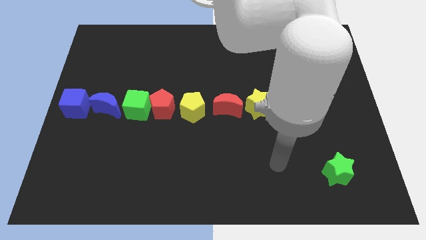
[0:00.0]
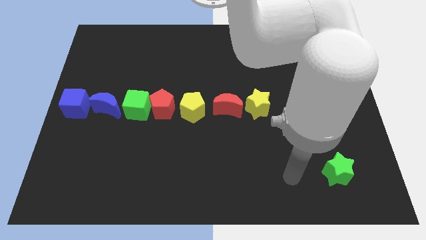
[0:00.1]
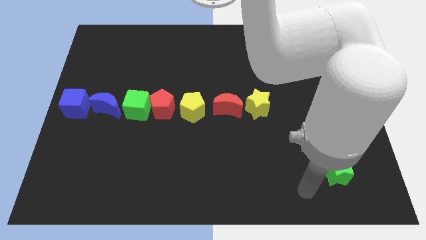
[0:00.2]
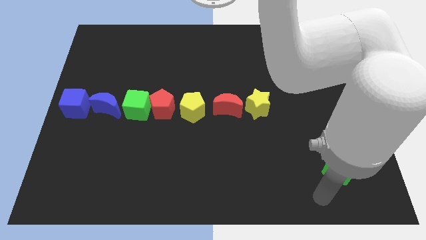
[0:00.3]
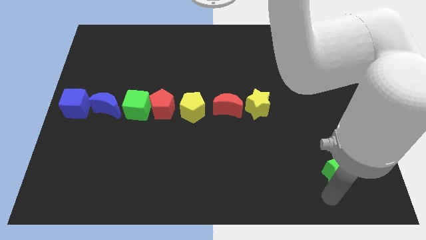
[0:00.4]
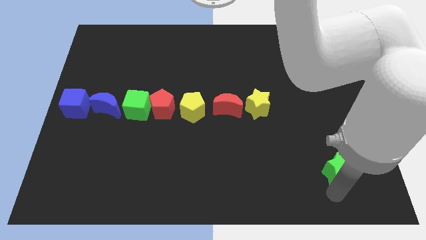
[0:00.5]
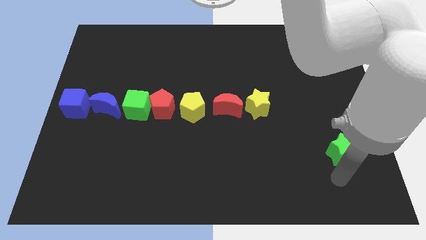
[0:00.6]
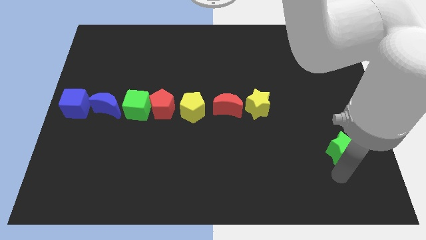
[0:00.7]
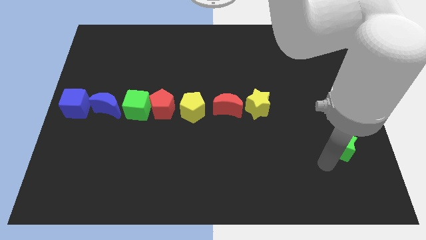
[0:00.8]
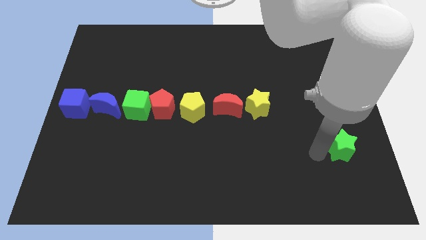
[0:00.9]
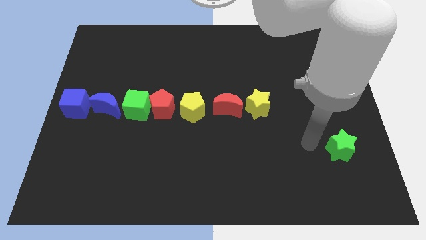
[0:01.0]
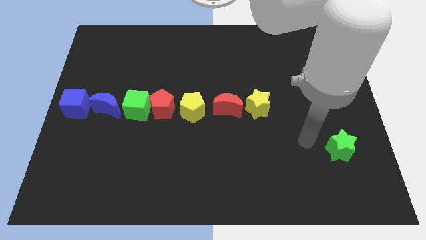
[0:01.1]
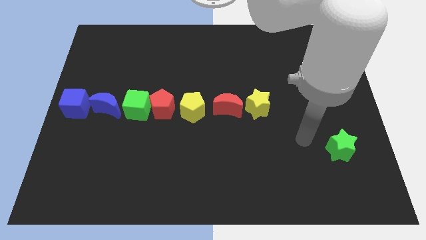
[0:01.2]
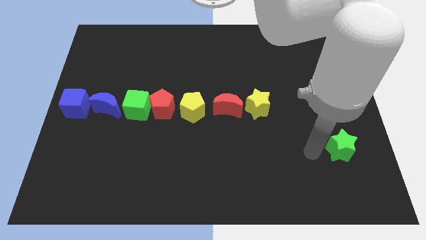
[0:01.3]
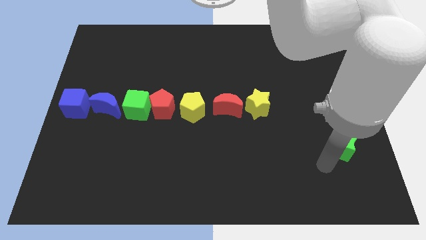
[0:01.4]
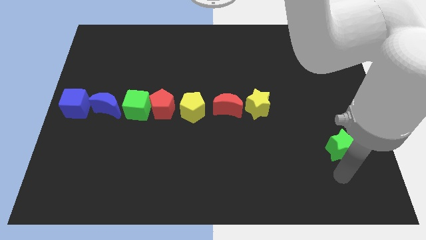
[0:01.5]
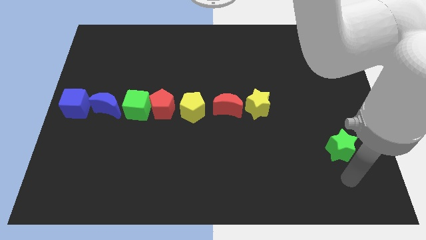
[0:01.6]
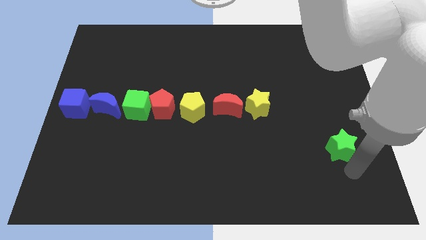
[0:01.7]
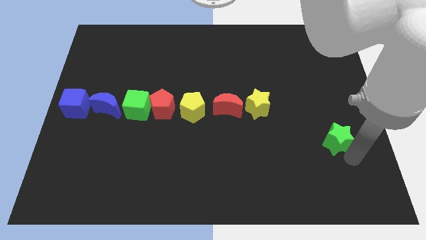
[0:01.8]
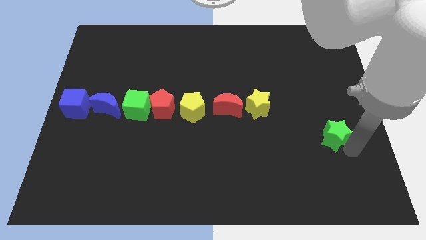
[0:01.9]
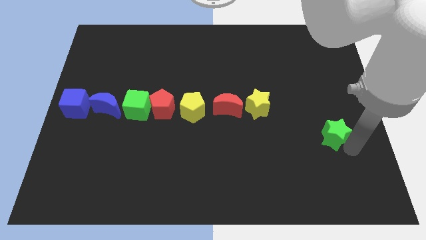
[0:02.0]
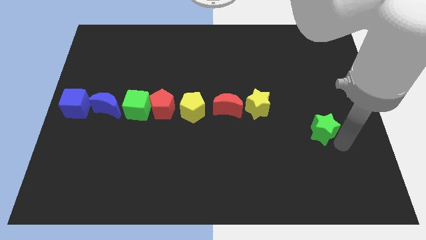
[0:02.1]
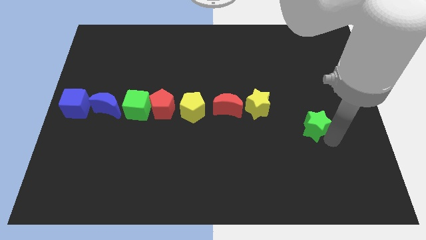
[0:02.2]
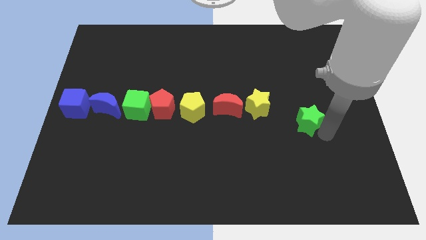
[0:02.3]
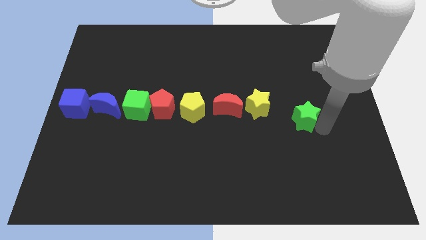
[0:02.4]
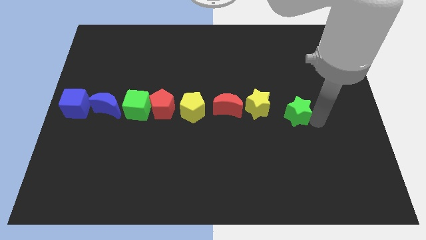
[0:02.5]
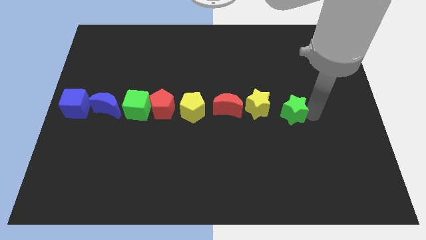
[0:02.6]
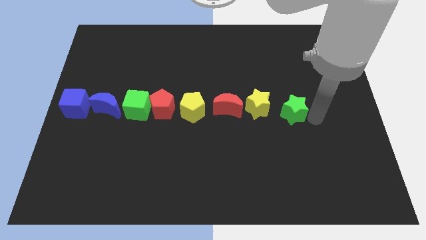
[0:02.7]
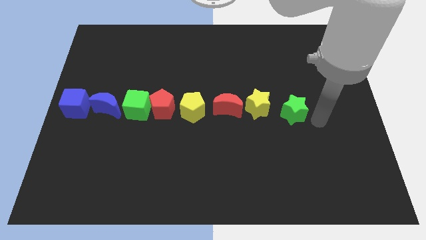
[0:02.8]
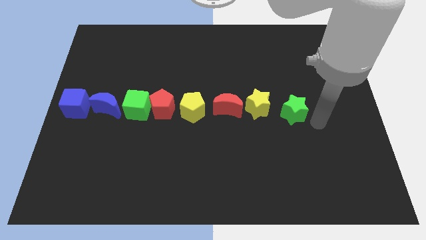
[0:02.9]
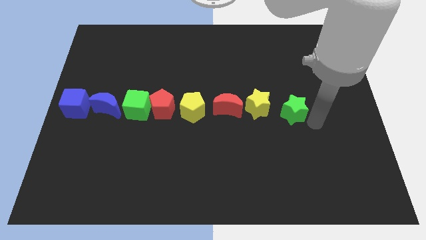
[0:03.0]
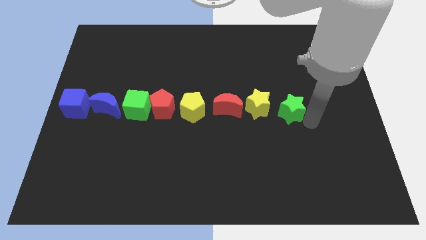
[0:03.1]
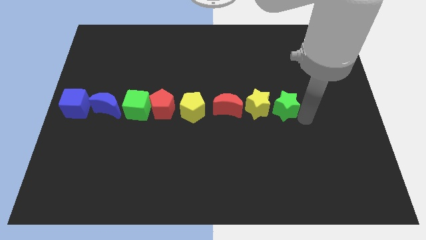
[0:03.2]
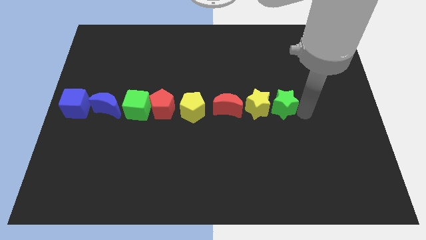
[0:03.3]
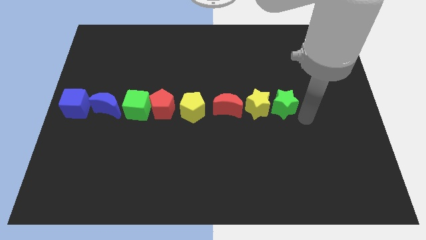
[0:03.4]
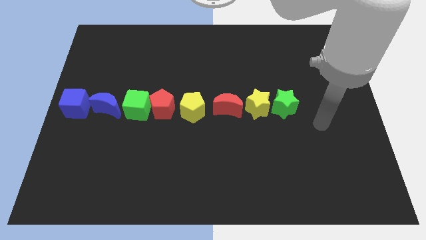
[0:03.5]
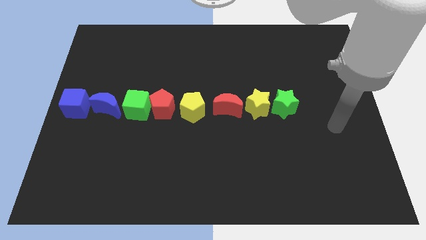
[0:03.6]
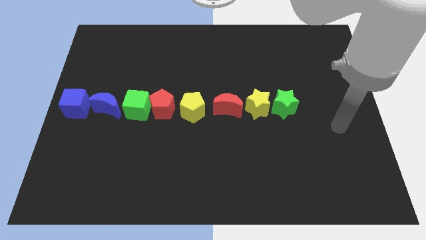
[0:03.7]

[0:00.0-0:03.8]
push the green star to the right of the yellow star to form a horizontal line

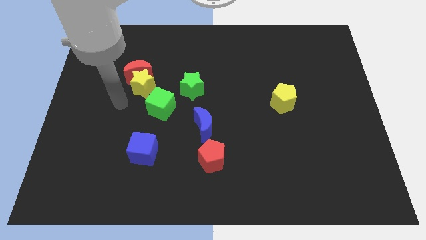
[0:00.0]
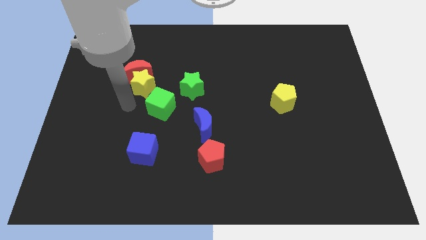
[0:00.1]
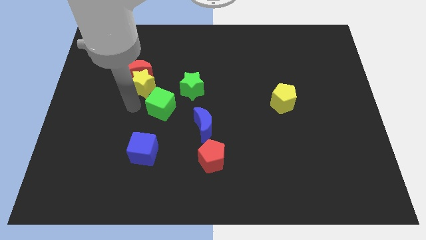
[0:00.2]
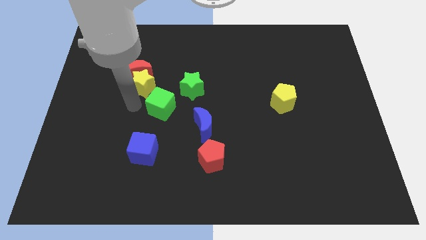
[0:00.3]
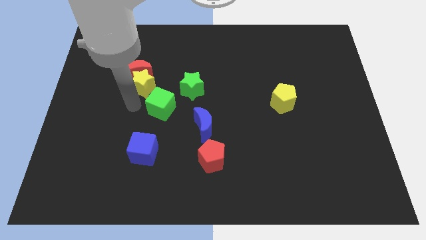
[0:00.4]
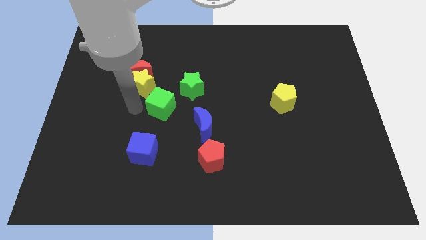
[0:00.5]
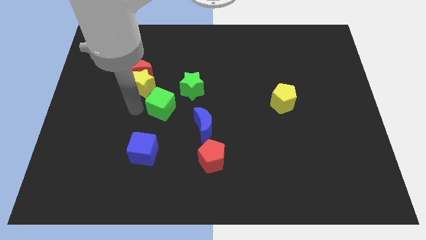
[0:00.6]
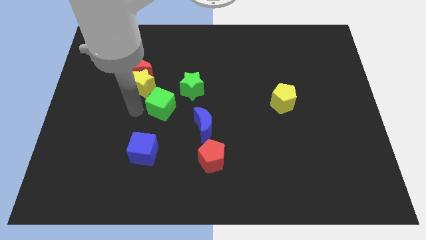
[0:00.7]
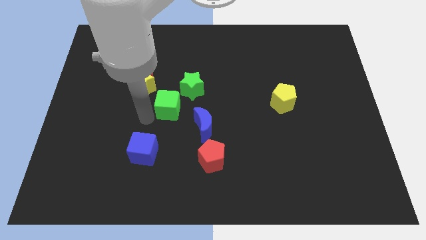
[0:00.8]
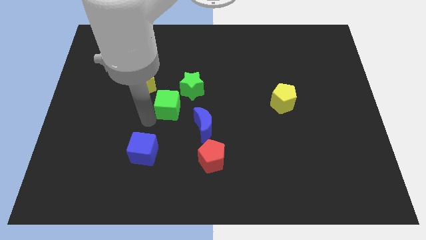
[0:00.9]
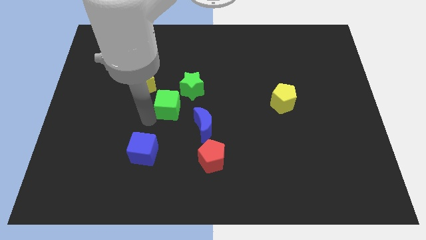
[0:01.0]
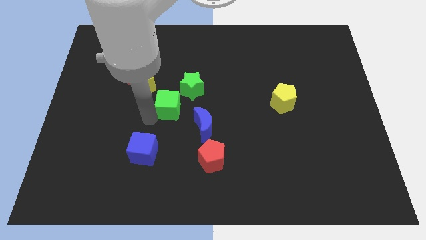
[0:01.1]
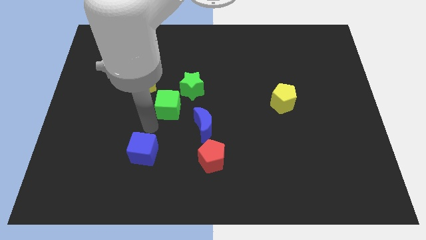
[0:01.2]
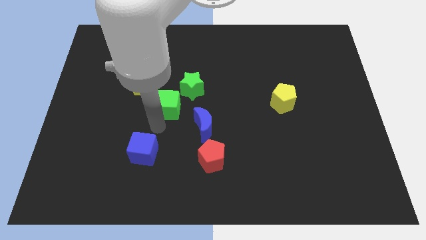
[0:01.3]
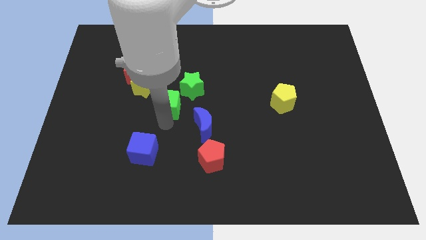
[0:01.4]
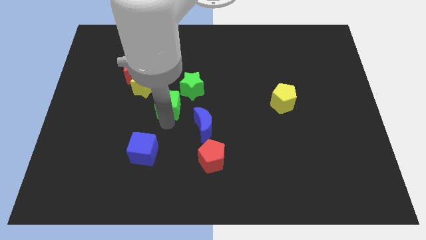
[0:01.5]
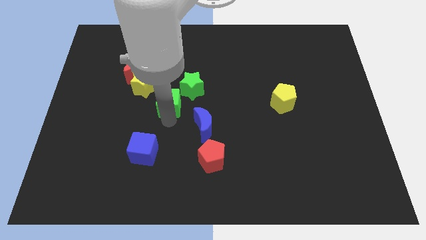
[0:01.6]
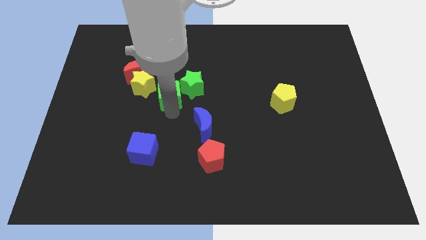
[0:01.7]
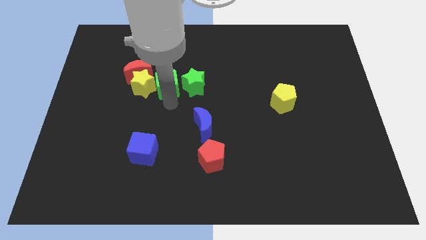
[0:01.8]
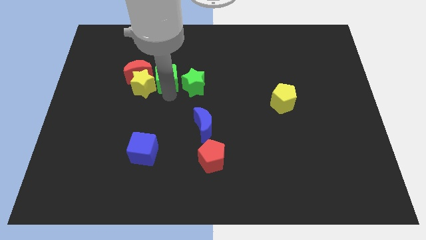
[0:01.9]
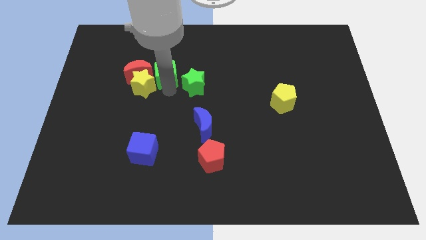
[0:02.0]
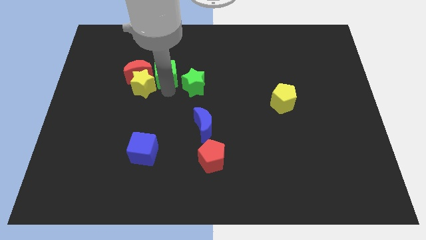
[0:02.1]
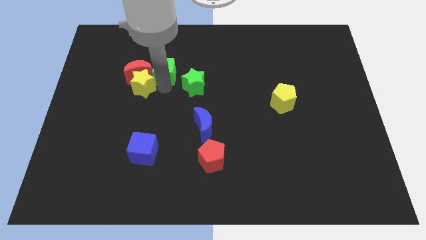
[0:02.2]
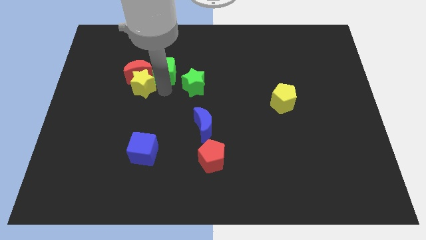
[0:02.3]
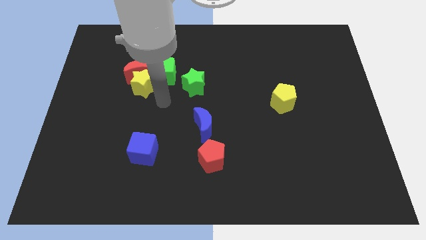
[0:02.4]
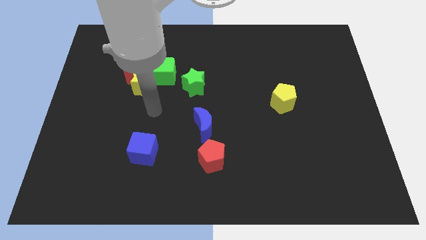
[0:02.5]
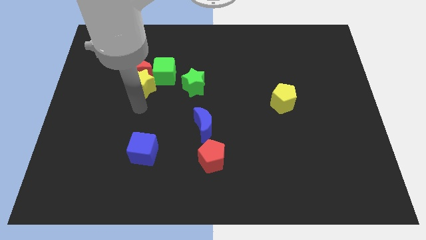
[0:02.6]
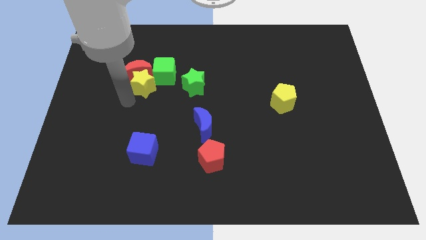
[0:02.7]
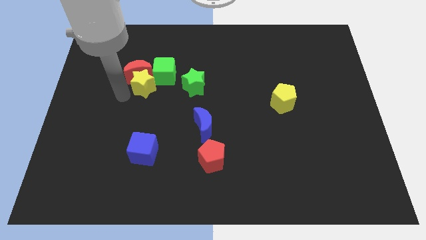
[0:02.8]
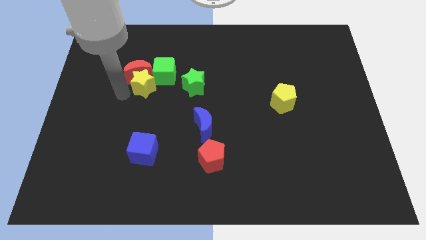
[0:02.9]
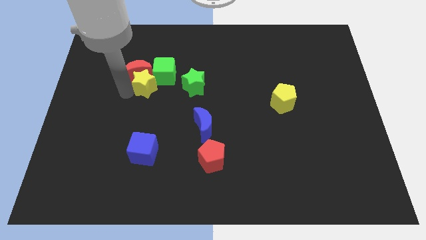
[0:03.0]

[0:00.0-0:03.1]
place green cube to right of red moon

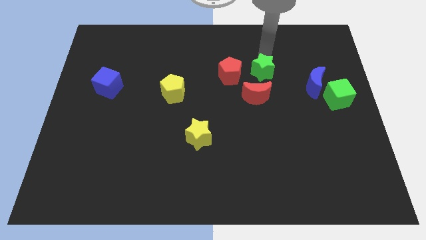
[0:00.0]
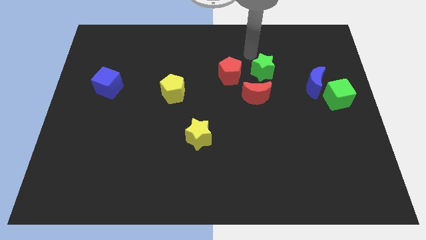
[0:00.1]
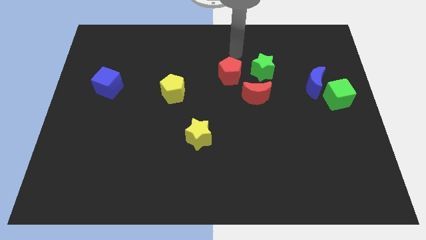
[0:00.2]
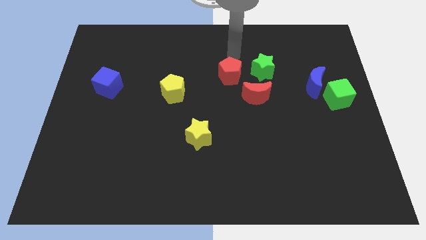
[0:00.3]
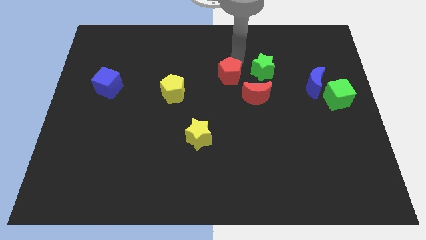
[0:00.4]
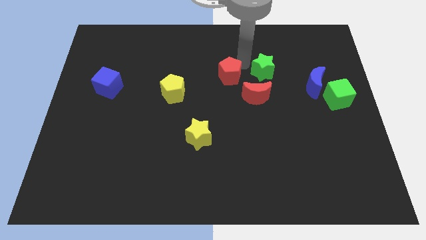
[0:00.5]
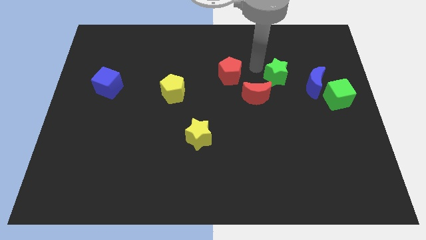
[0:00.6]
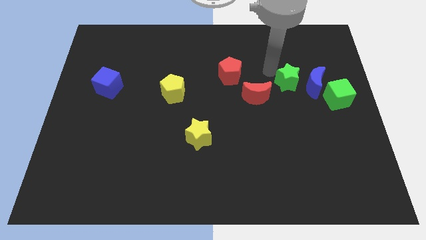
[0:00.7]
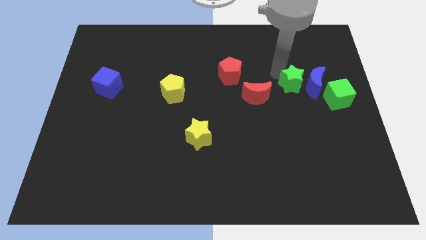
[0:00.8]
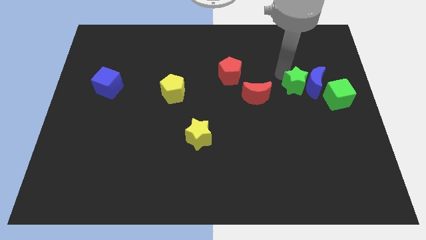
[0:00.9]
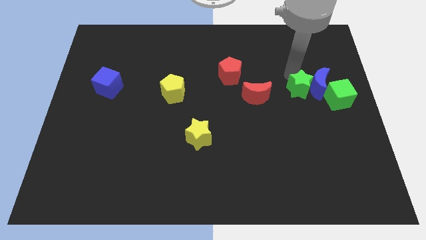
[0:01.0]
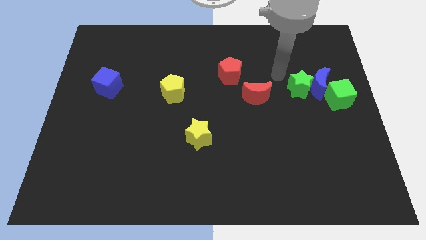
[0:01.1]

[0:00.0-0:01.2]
push the green star into the blue moon

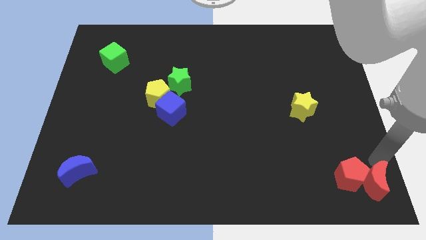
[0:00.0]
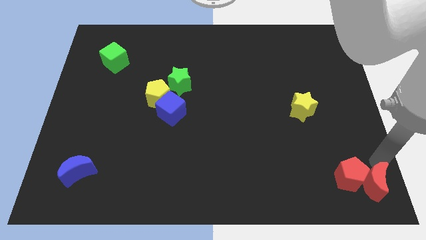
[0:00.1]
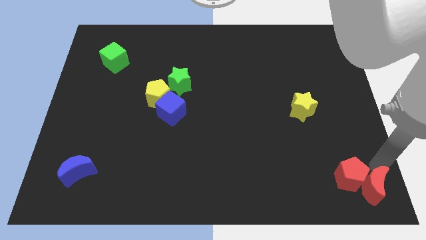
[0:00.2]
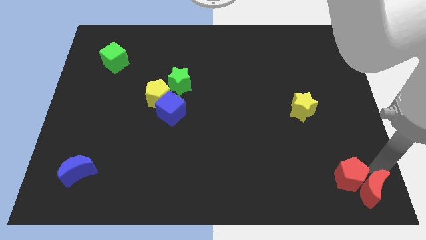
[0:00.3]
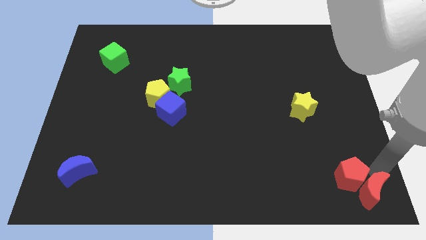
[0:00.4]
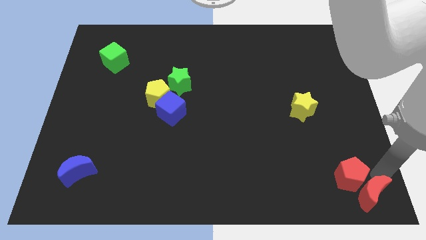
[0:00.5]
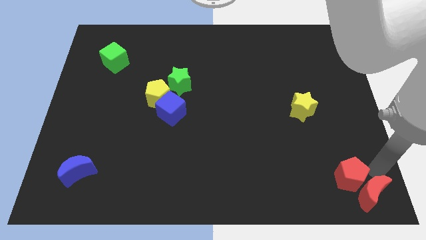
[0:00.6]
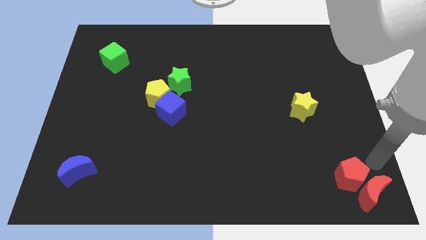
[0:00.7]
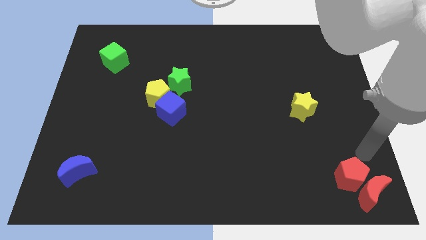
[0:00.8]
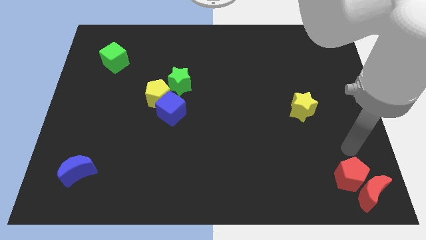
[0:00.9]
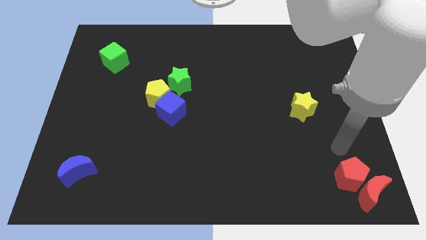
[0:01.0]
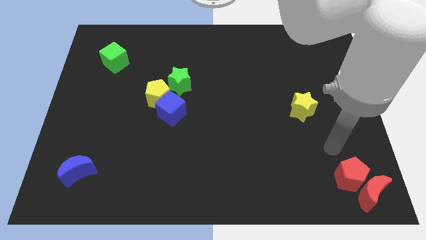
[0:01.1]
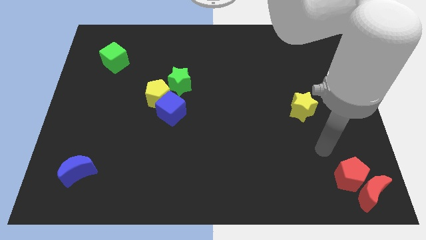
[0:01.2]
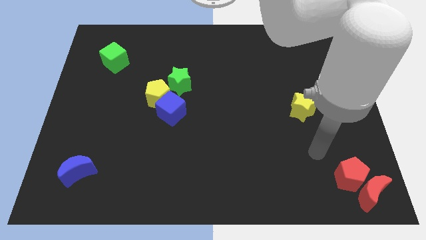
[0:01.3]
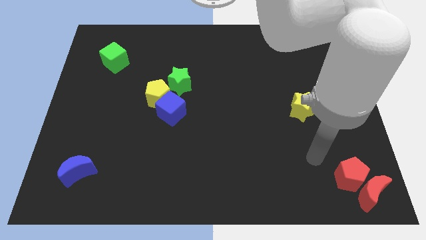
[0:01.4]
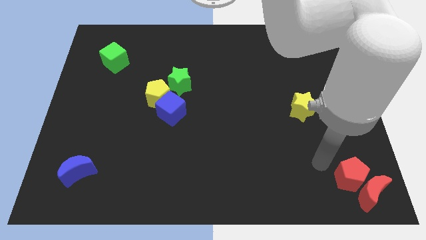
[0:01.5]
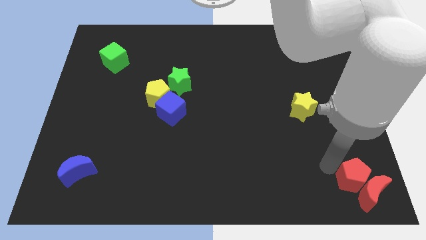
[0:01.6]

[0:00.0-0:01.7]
move red crescent down to the red pentagon
